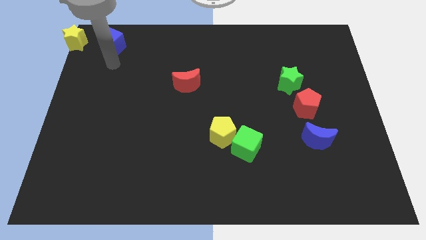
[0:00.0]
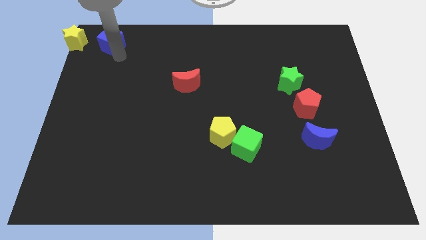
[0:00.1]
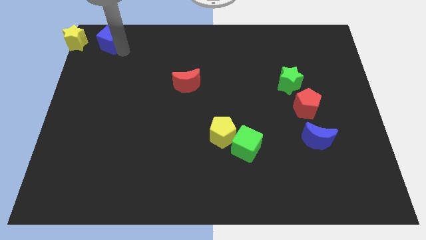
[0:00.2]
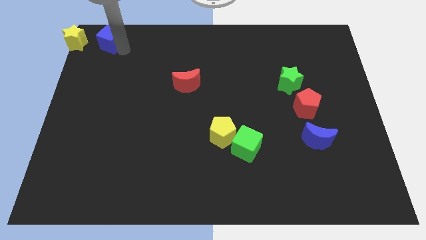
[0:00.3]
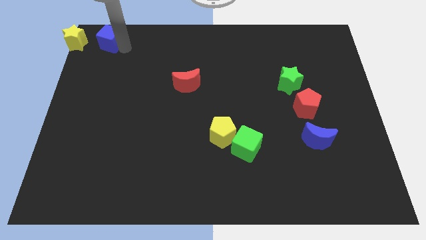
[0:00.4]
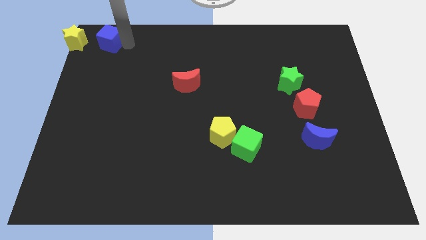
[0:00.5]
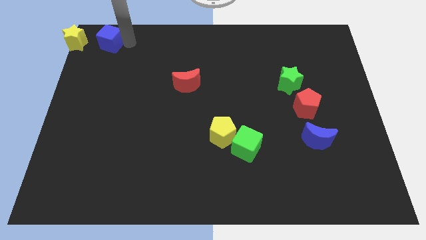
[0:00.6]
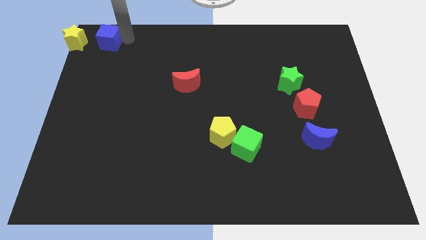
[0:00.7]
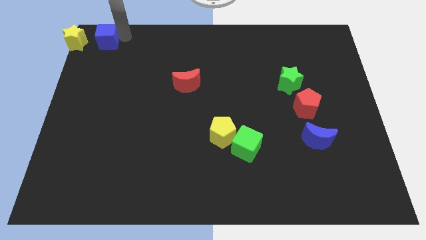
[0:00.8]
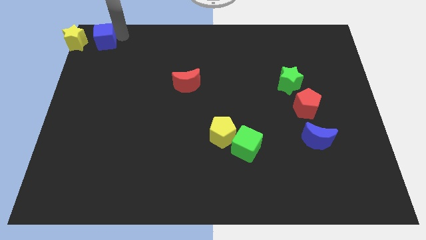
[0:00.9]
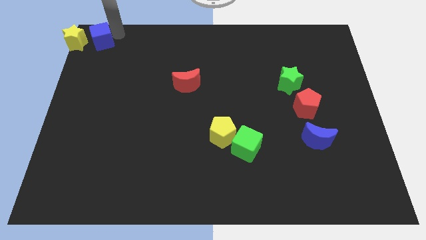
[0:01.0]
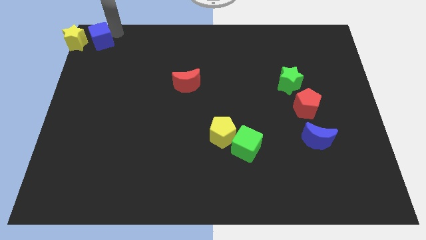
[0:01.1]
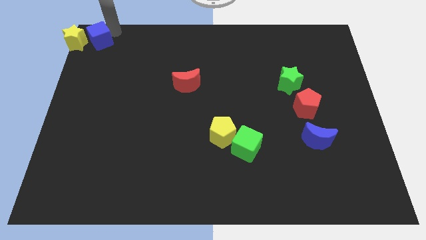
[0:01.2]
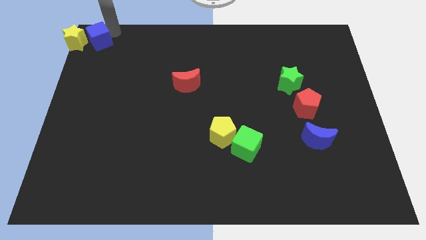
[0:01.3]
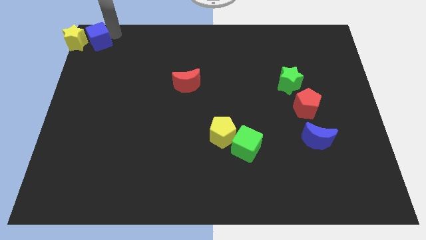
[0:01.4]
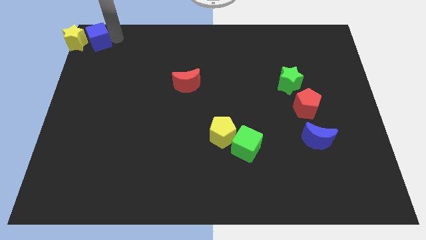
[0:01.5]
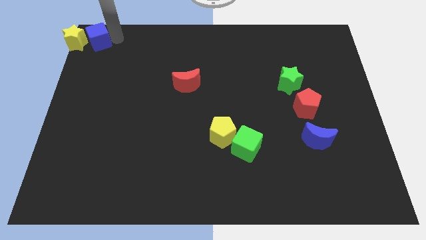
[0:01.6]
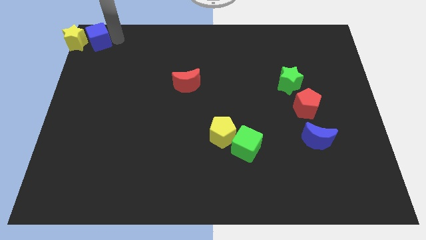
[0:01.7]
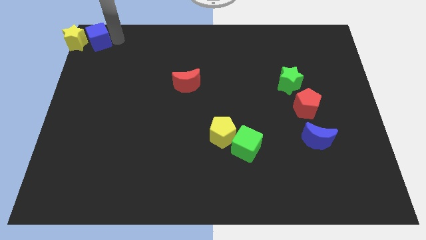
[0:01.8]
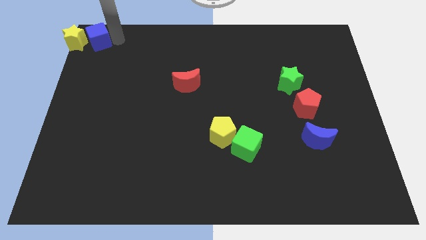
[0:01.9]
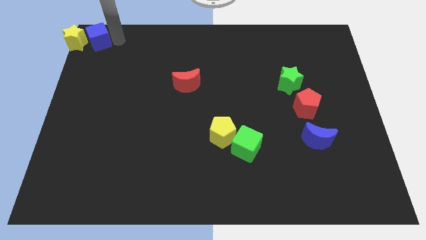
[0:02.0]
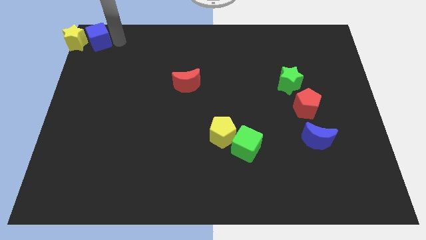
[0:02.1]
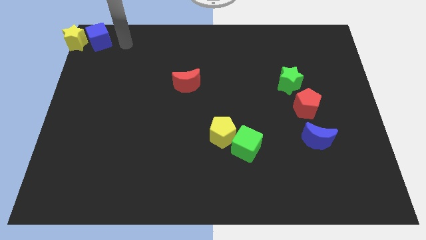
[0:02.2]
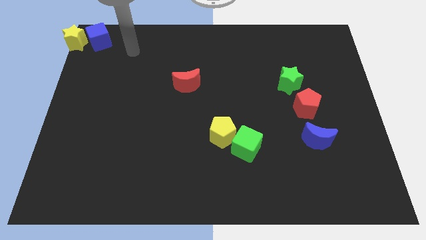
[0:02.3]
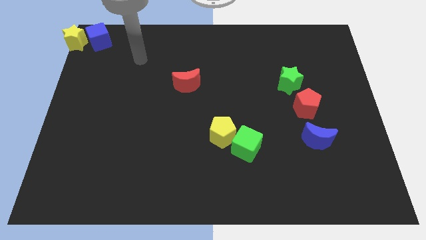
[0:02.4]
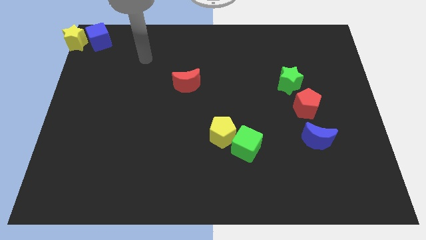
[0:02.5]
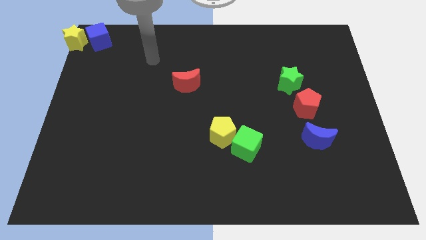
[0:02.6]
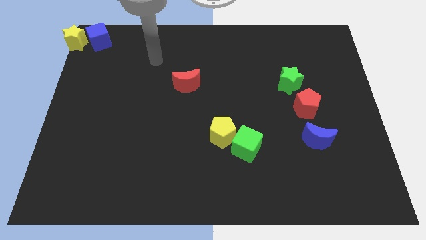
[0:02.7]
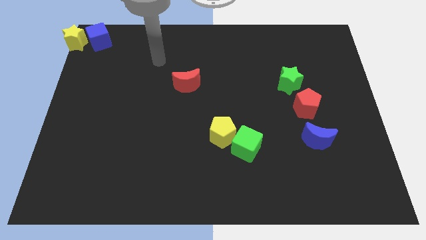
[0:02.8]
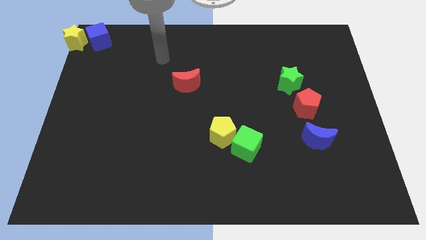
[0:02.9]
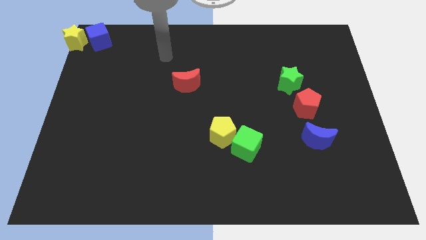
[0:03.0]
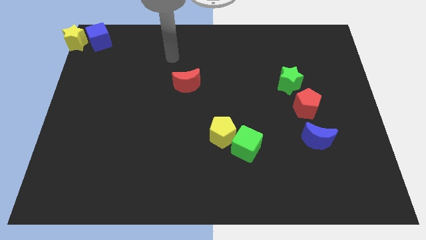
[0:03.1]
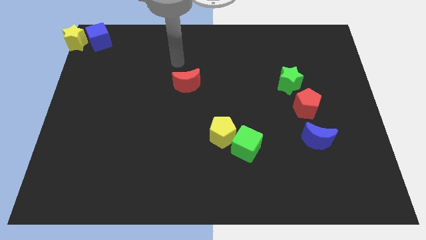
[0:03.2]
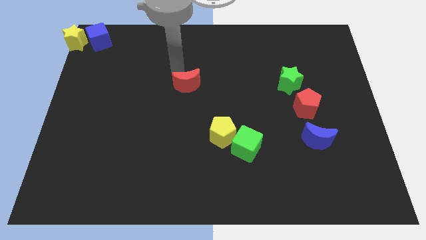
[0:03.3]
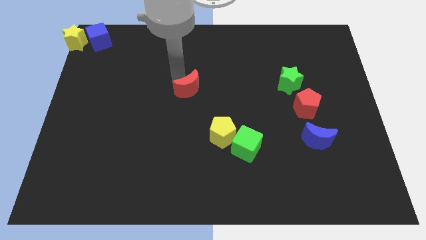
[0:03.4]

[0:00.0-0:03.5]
move the blue cube parallel to the yellow star

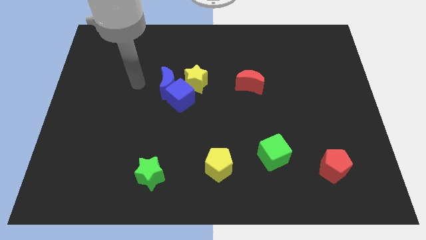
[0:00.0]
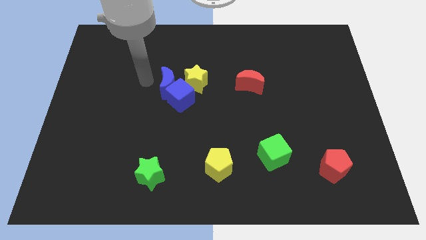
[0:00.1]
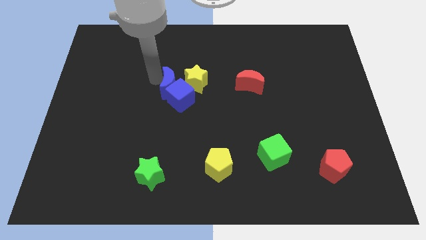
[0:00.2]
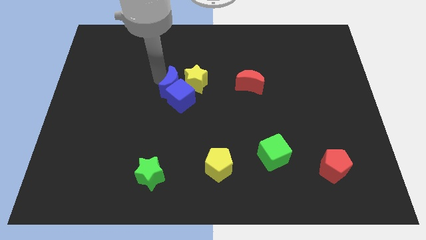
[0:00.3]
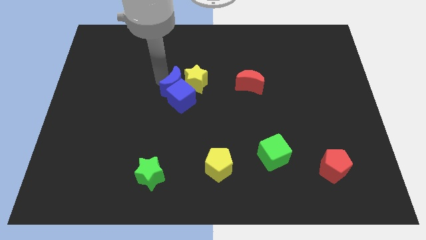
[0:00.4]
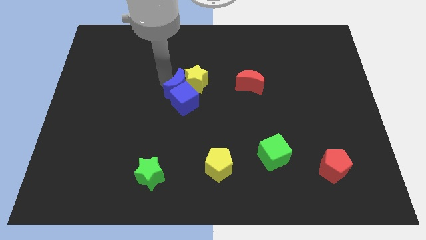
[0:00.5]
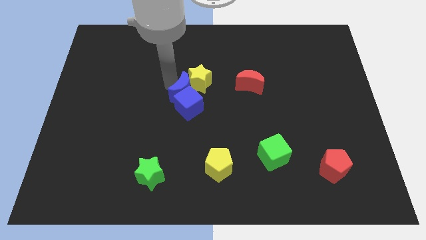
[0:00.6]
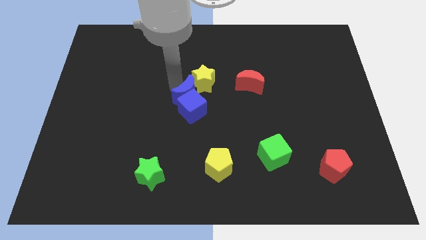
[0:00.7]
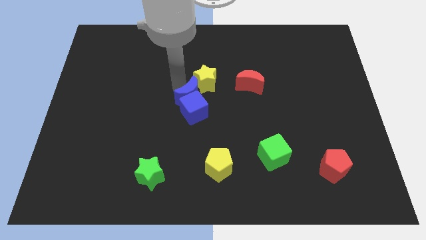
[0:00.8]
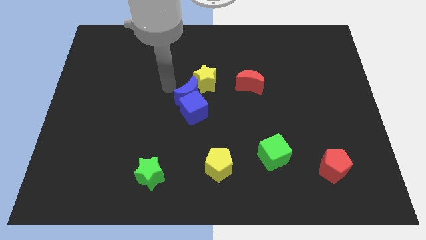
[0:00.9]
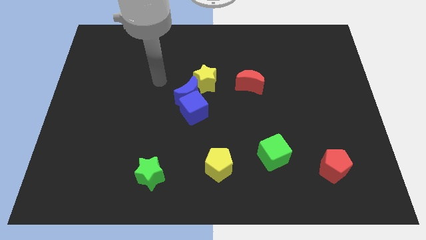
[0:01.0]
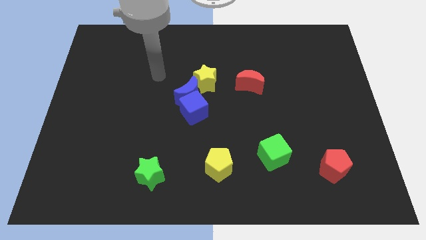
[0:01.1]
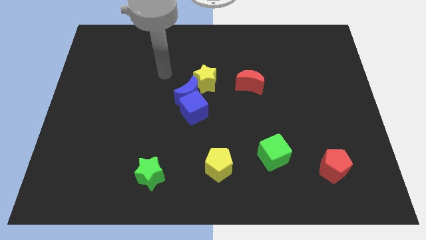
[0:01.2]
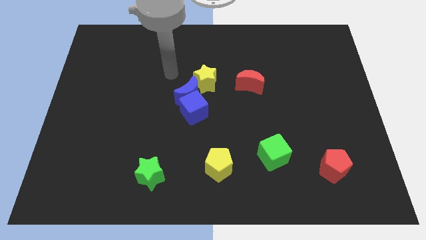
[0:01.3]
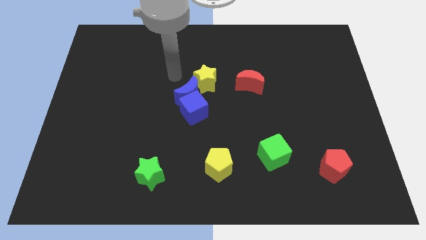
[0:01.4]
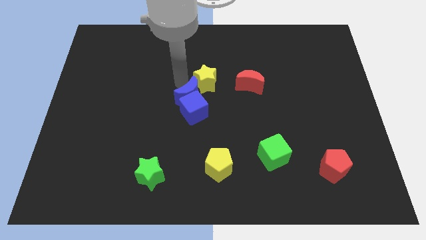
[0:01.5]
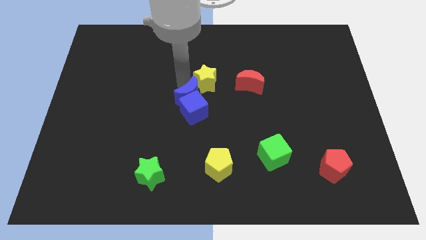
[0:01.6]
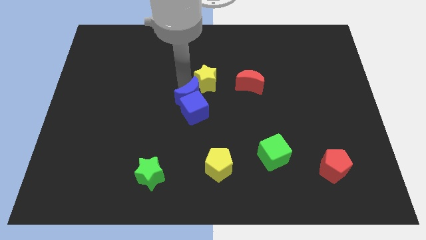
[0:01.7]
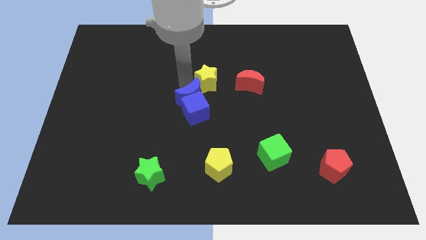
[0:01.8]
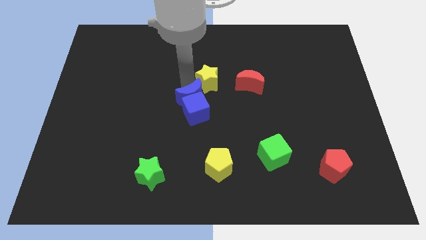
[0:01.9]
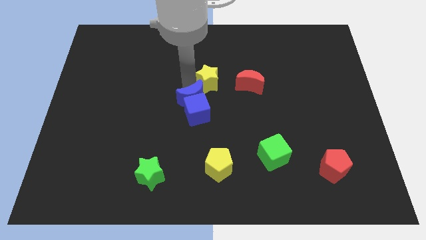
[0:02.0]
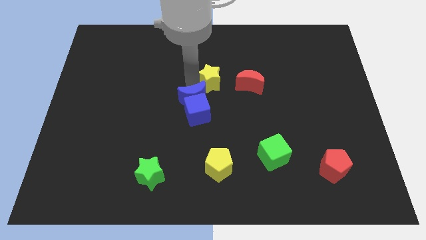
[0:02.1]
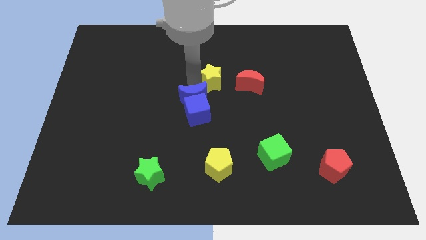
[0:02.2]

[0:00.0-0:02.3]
push the blue moon into the blue cube

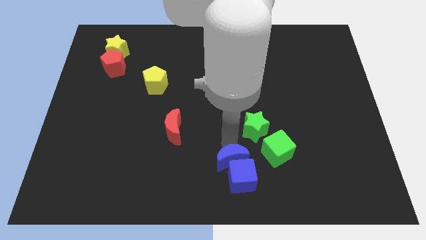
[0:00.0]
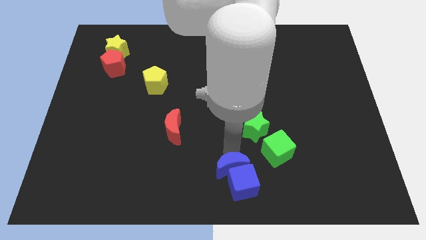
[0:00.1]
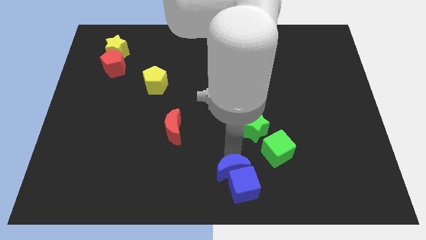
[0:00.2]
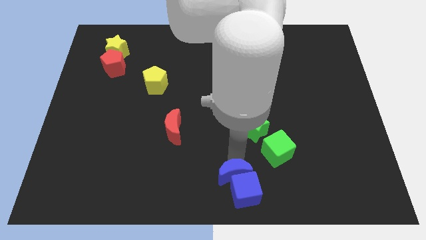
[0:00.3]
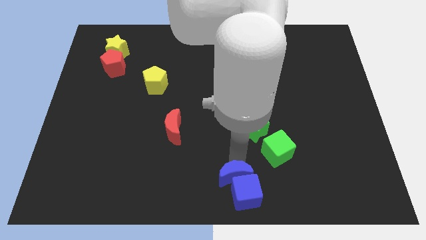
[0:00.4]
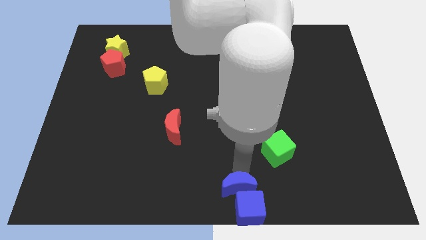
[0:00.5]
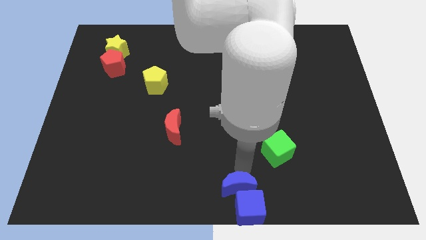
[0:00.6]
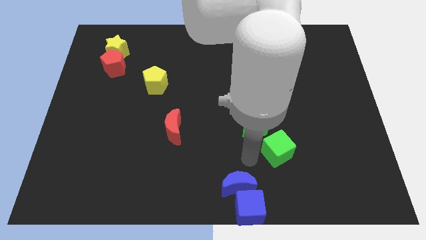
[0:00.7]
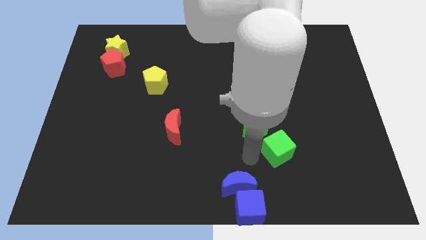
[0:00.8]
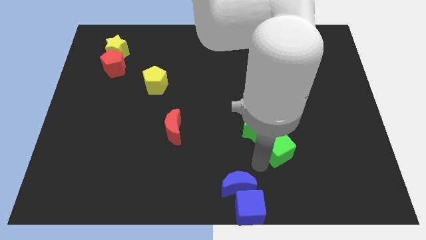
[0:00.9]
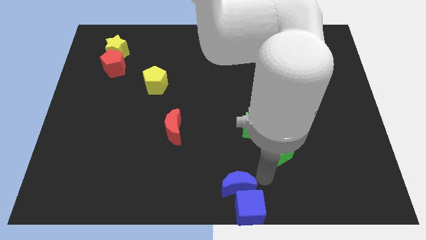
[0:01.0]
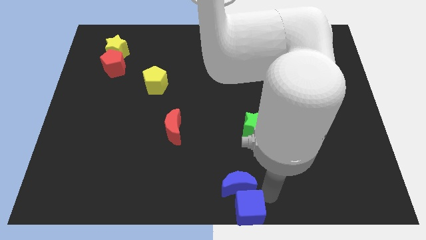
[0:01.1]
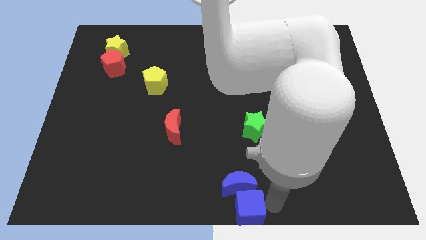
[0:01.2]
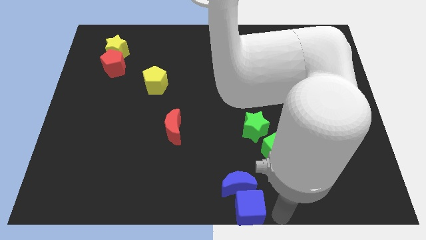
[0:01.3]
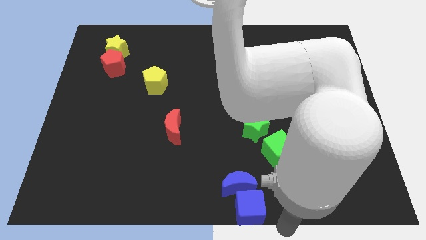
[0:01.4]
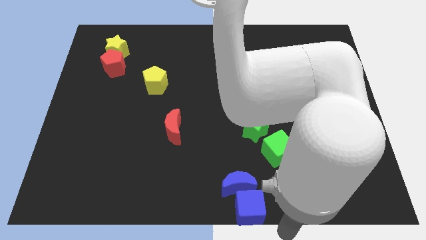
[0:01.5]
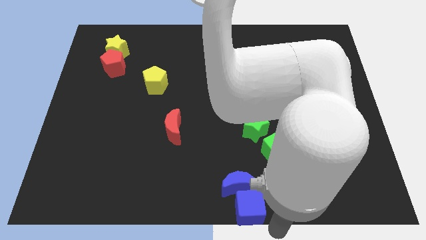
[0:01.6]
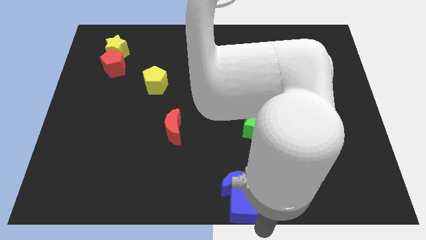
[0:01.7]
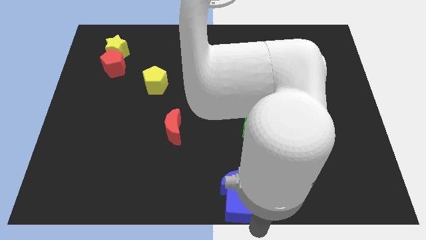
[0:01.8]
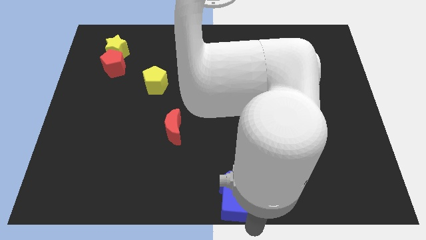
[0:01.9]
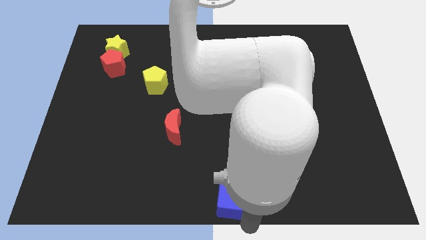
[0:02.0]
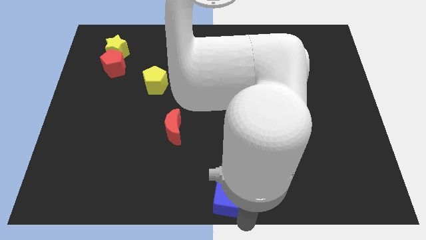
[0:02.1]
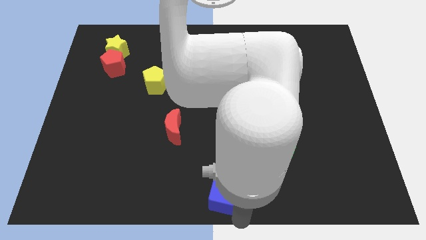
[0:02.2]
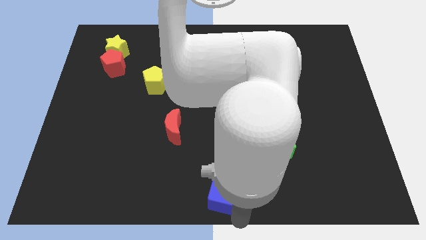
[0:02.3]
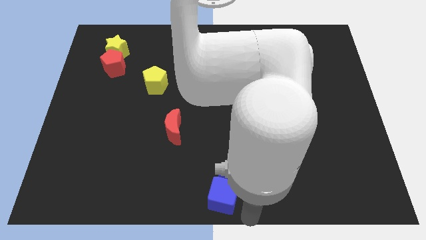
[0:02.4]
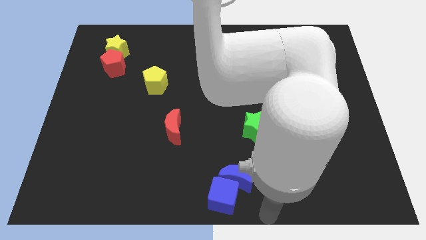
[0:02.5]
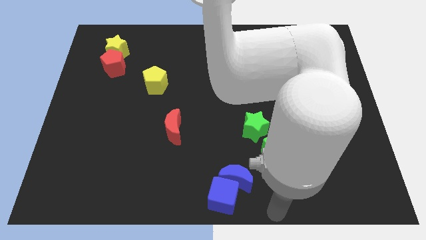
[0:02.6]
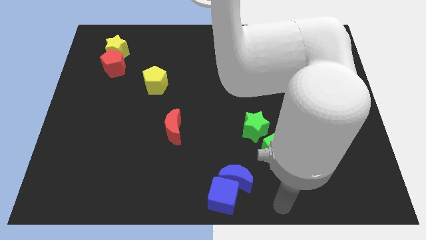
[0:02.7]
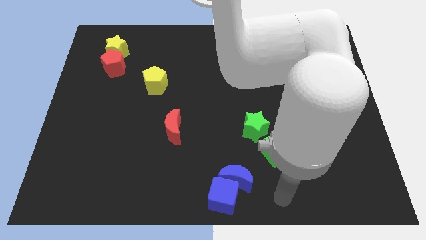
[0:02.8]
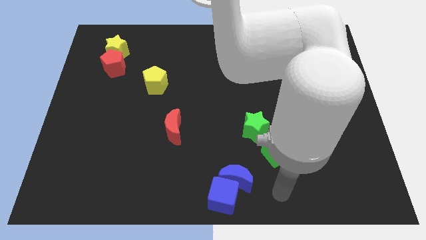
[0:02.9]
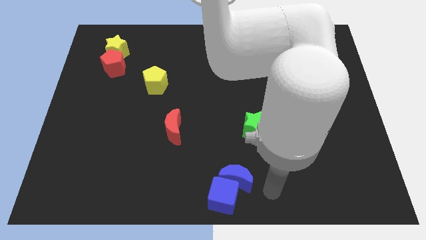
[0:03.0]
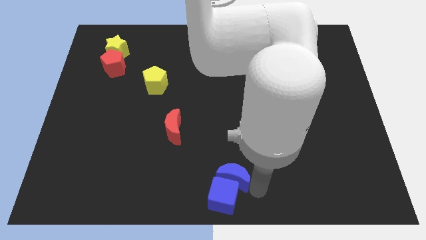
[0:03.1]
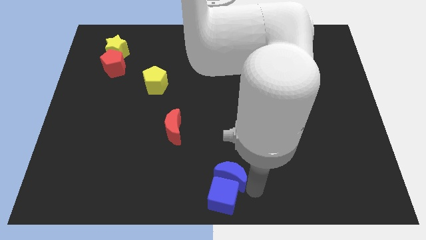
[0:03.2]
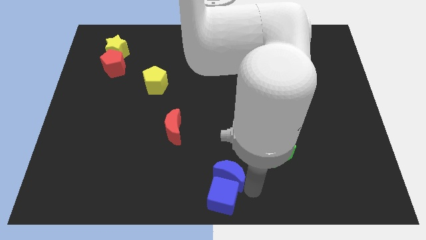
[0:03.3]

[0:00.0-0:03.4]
place the blue crescent and blue cube at the bottom center of the board
